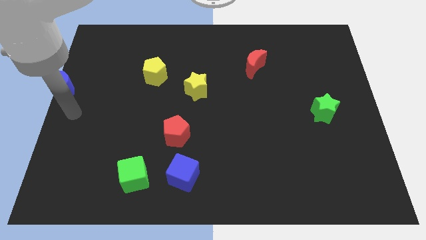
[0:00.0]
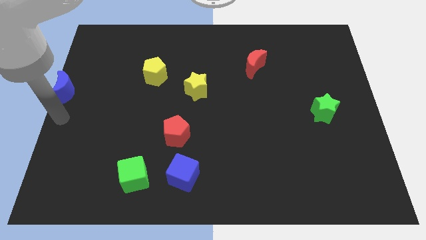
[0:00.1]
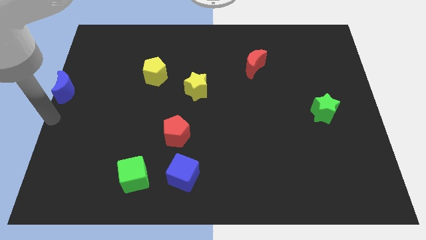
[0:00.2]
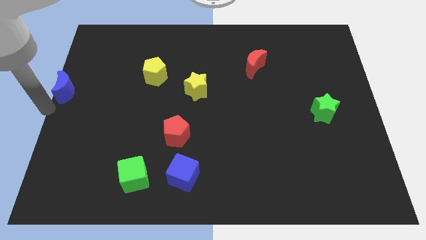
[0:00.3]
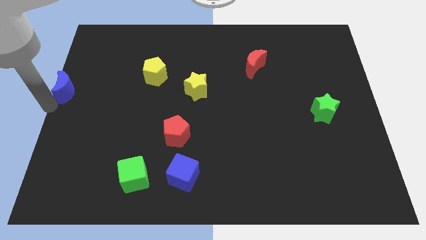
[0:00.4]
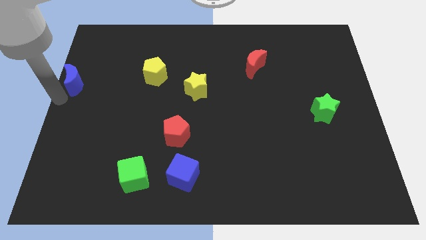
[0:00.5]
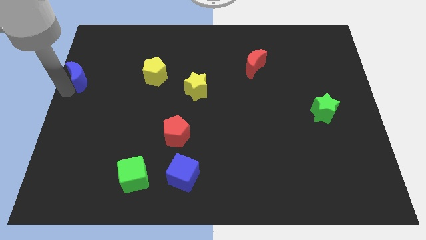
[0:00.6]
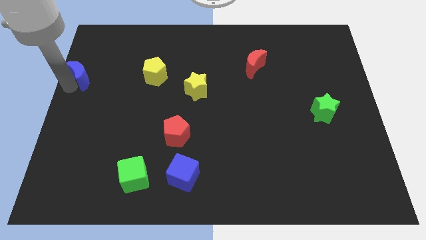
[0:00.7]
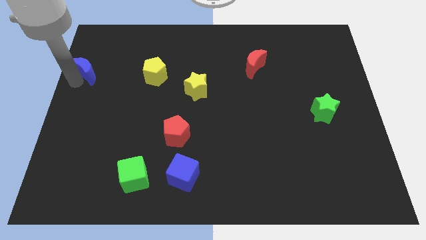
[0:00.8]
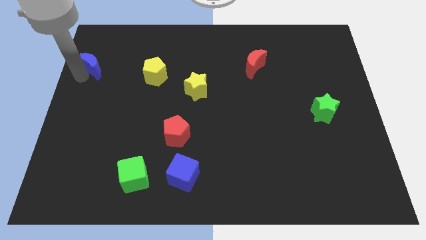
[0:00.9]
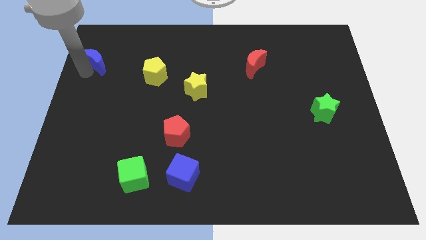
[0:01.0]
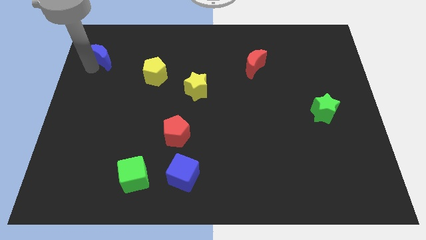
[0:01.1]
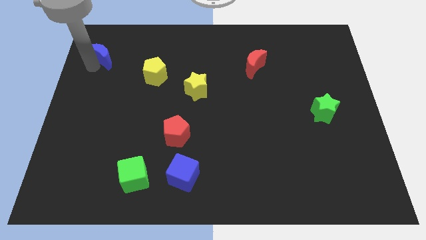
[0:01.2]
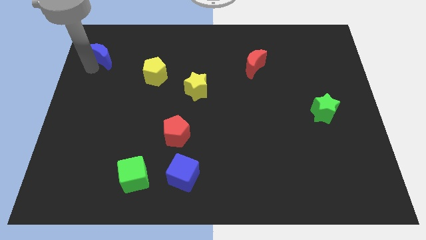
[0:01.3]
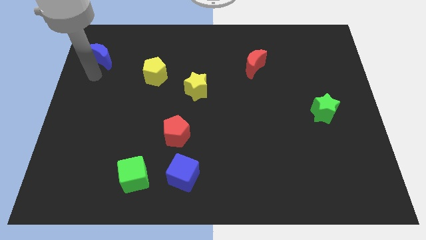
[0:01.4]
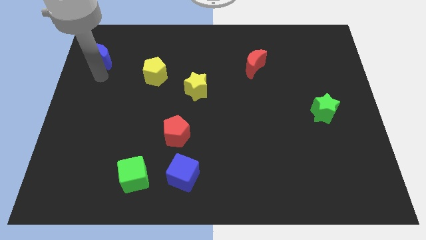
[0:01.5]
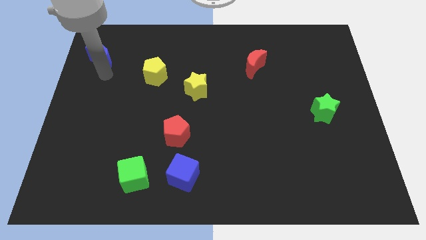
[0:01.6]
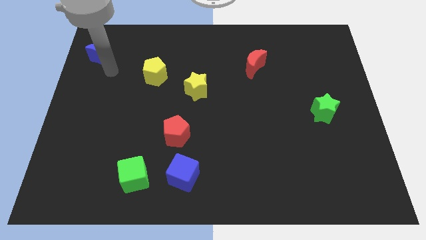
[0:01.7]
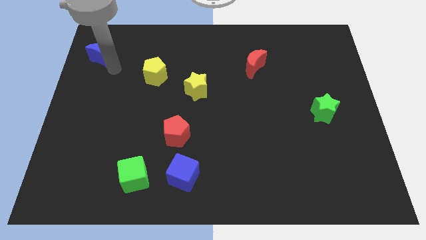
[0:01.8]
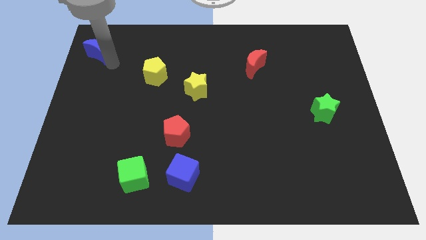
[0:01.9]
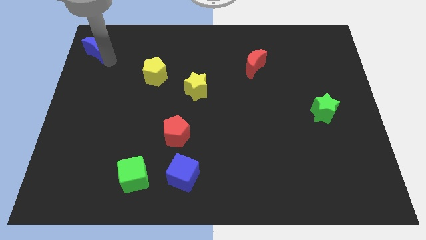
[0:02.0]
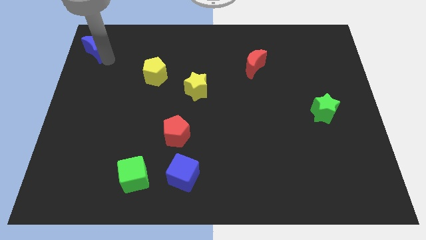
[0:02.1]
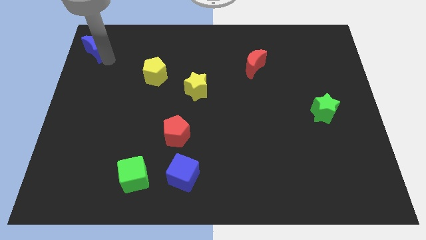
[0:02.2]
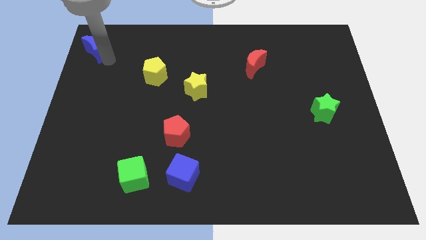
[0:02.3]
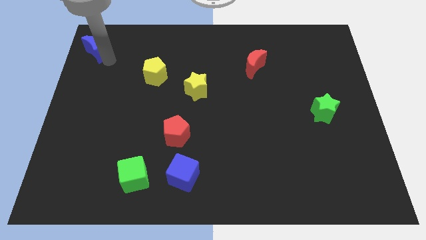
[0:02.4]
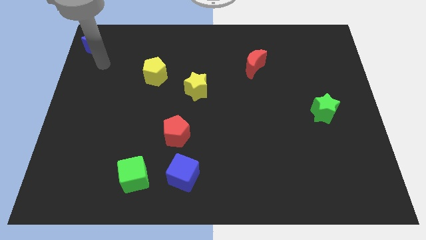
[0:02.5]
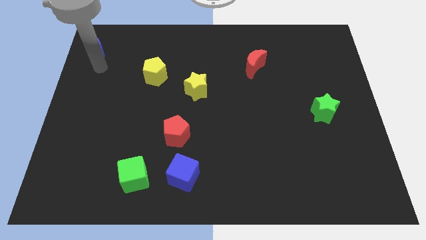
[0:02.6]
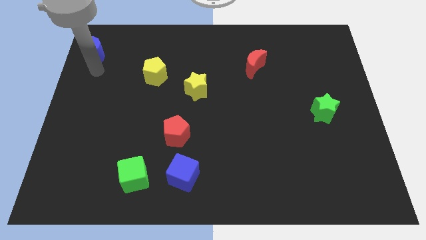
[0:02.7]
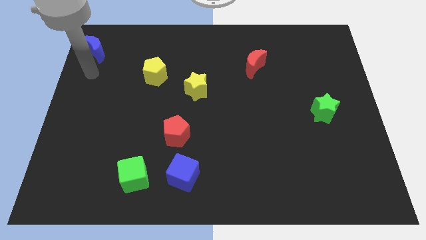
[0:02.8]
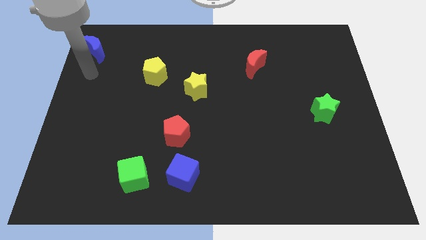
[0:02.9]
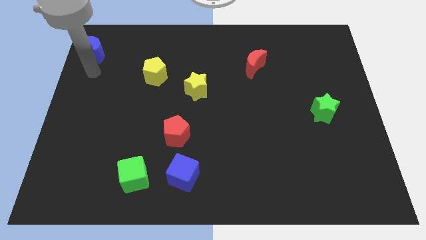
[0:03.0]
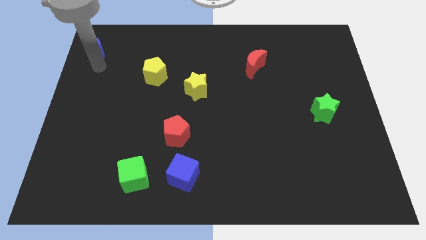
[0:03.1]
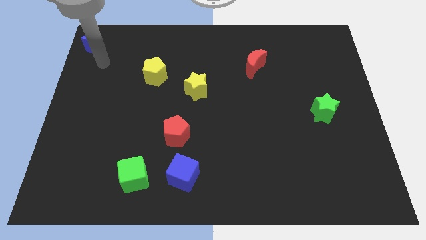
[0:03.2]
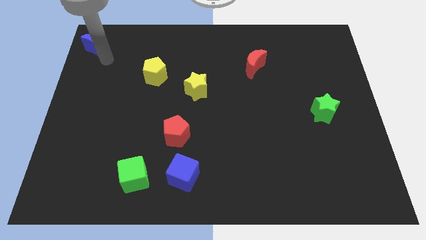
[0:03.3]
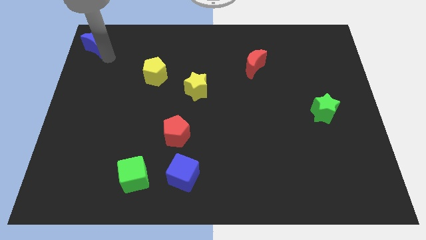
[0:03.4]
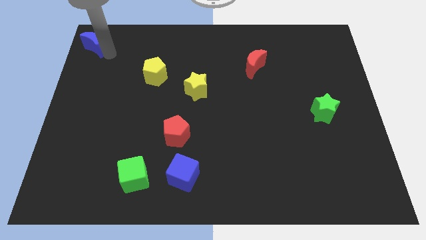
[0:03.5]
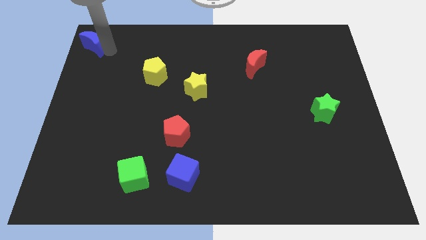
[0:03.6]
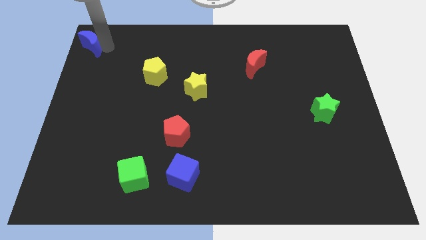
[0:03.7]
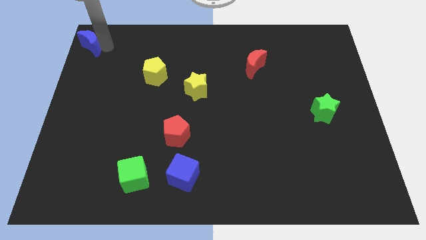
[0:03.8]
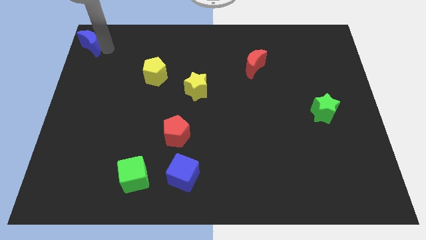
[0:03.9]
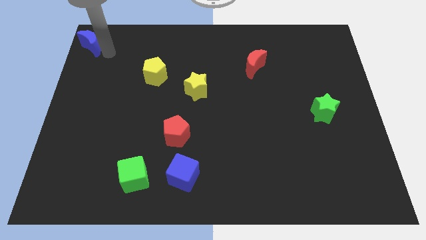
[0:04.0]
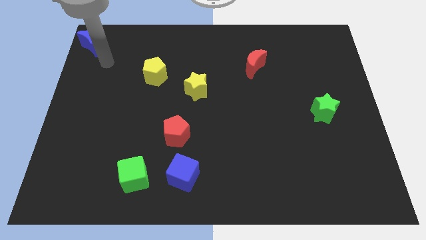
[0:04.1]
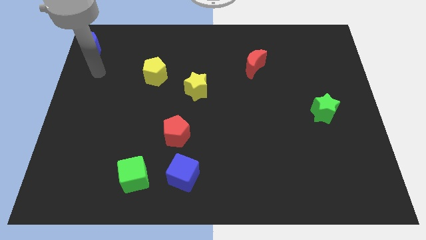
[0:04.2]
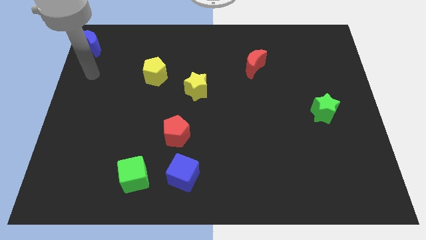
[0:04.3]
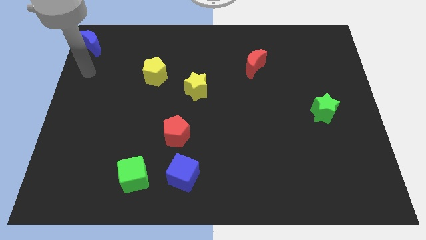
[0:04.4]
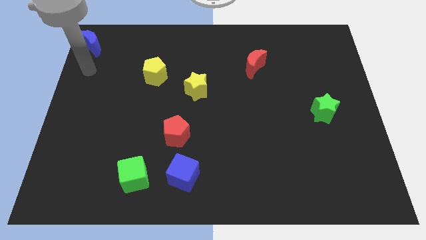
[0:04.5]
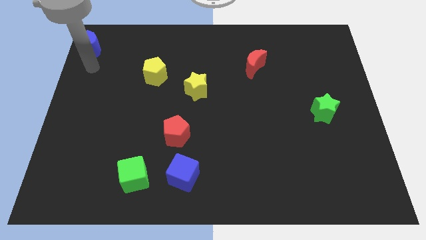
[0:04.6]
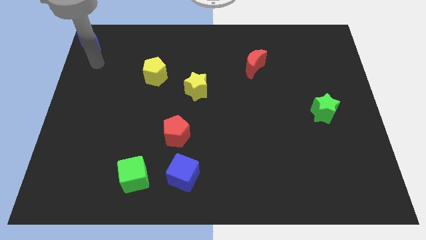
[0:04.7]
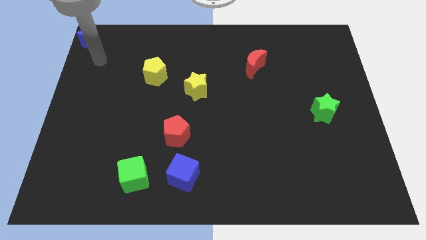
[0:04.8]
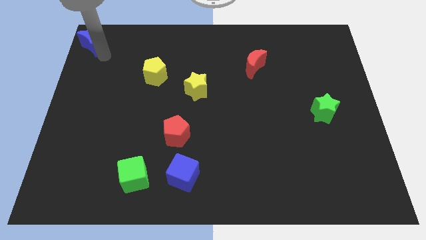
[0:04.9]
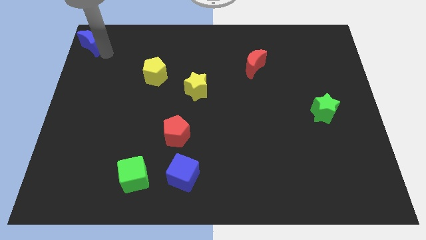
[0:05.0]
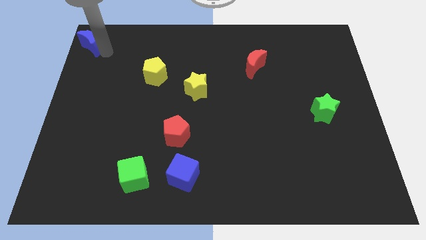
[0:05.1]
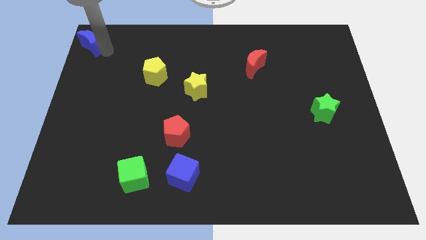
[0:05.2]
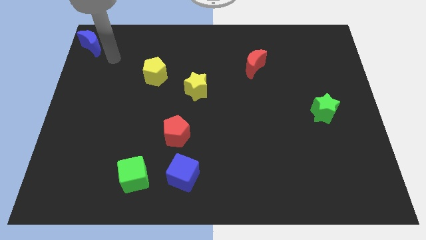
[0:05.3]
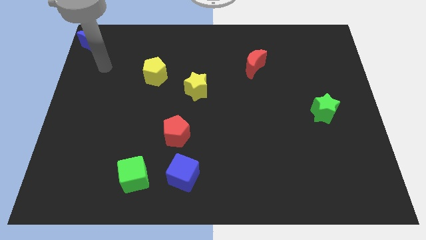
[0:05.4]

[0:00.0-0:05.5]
put the blue moon at the top left corner

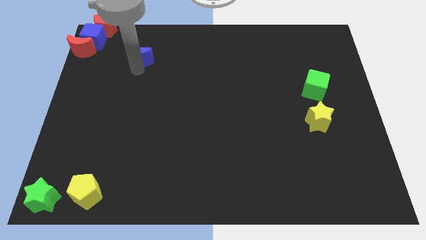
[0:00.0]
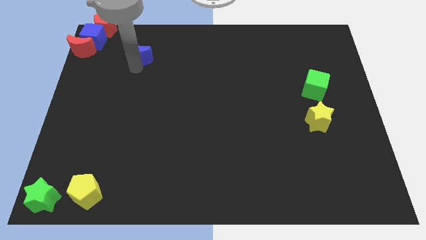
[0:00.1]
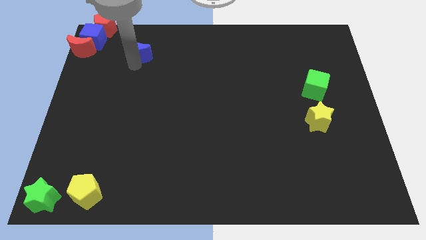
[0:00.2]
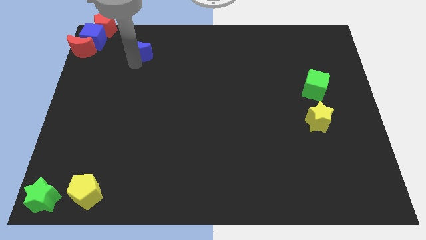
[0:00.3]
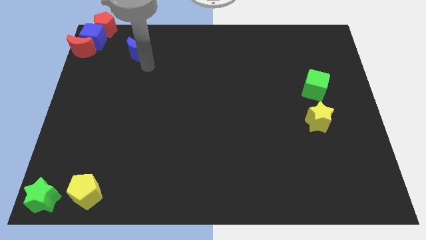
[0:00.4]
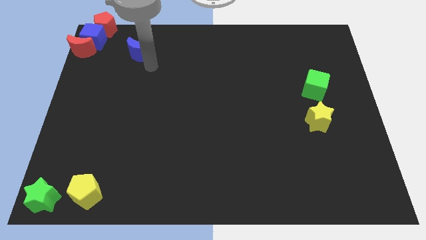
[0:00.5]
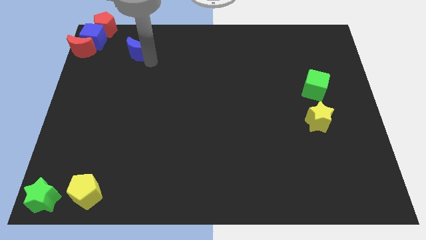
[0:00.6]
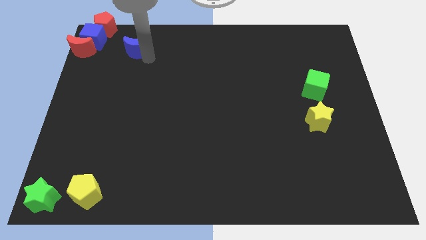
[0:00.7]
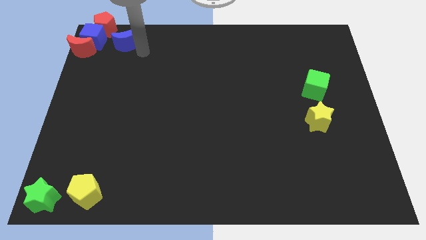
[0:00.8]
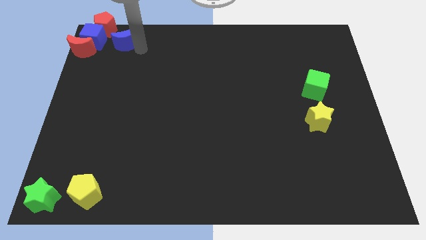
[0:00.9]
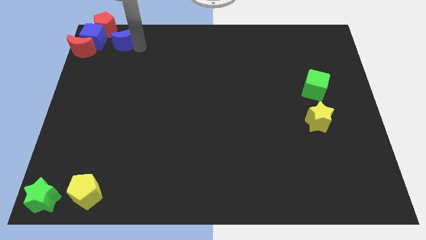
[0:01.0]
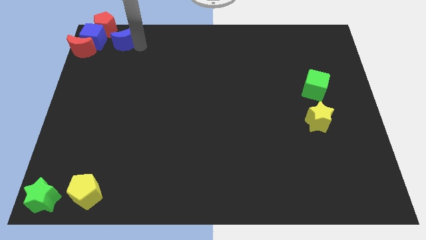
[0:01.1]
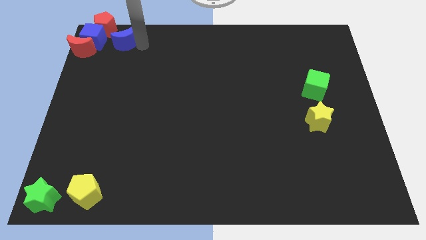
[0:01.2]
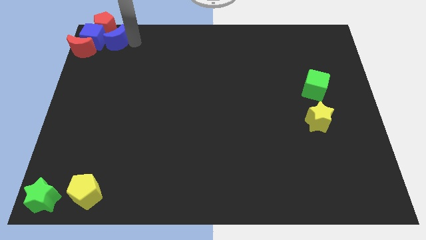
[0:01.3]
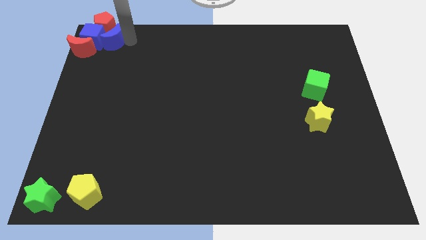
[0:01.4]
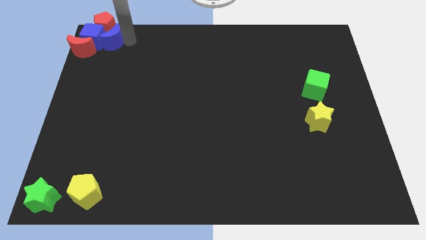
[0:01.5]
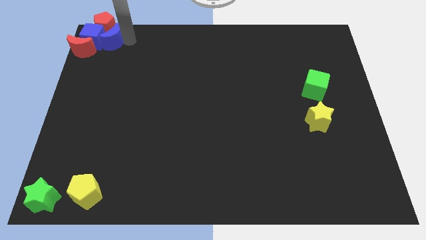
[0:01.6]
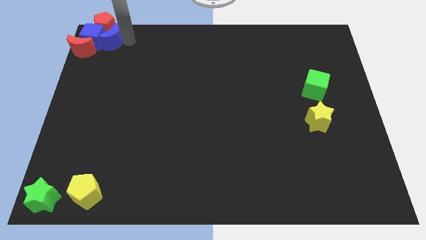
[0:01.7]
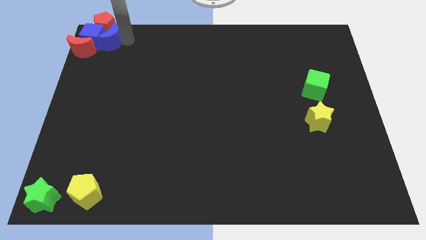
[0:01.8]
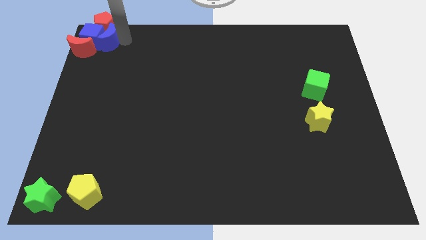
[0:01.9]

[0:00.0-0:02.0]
push the blue moon to the top left corner of the board

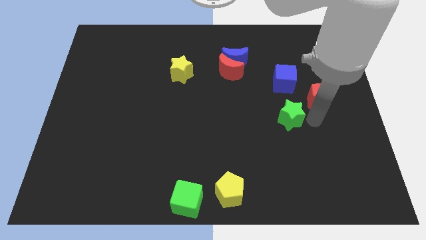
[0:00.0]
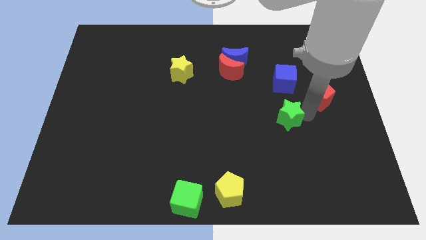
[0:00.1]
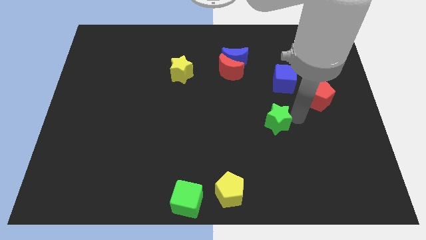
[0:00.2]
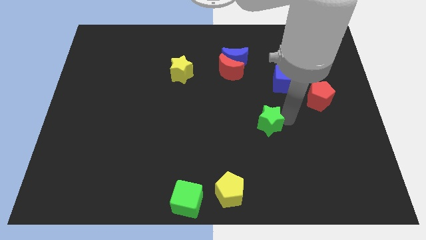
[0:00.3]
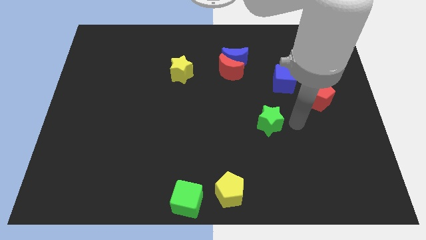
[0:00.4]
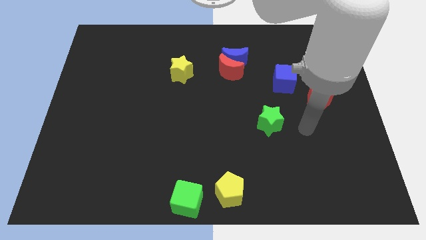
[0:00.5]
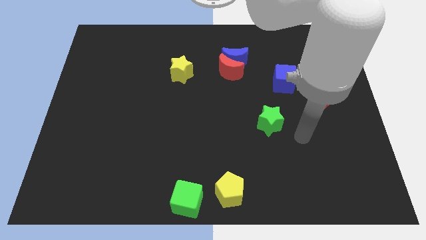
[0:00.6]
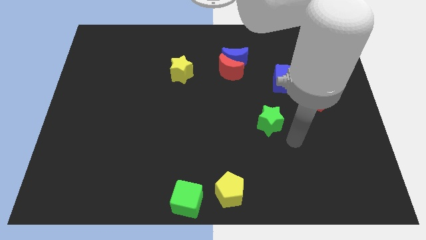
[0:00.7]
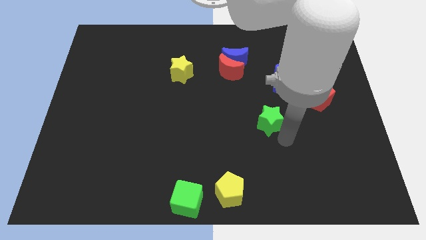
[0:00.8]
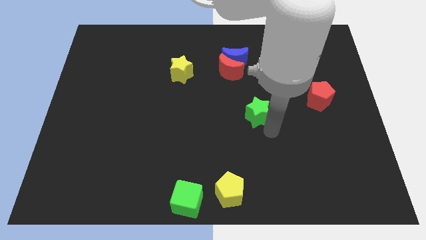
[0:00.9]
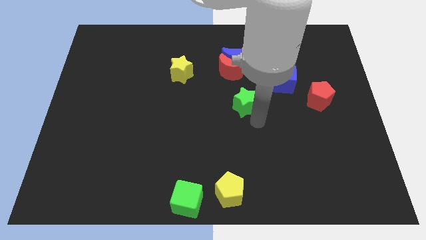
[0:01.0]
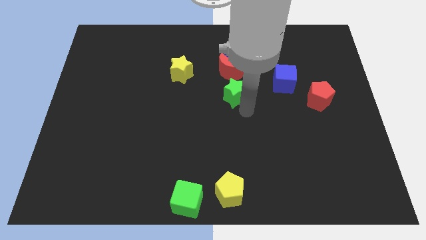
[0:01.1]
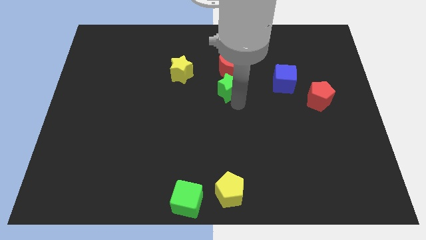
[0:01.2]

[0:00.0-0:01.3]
push the green star to the bottom of the red crescent

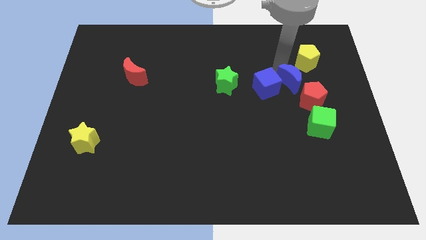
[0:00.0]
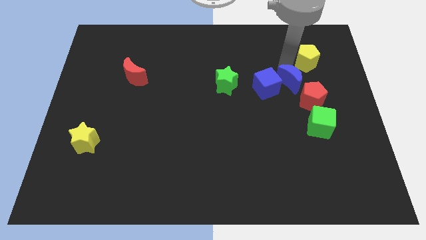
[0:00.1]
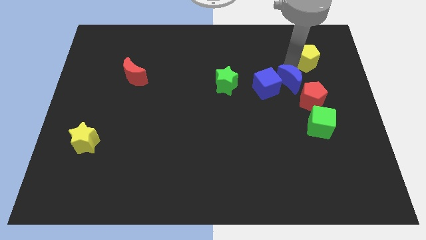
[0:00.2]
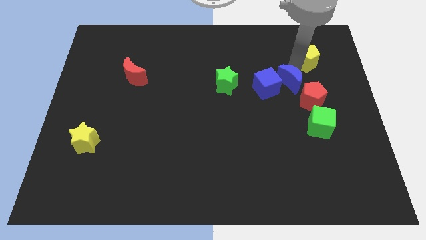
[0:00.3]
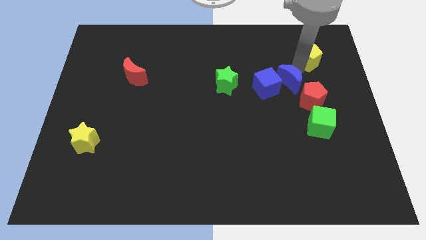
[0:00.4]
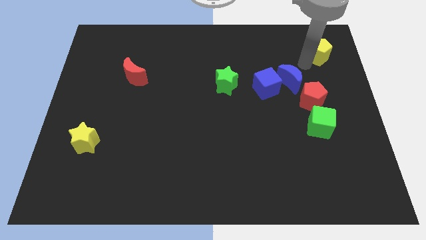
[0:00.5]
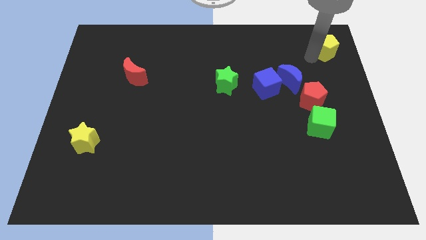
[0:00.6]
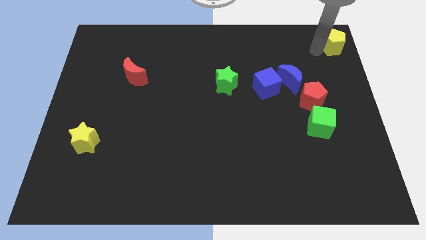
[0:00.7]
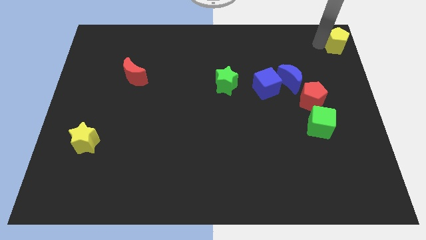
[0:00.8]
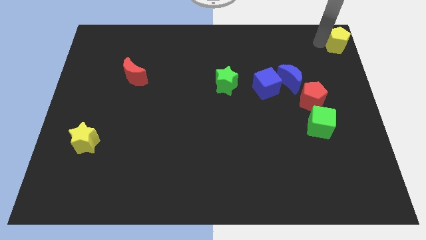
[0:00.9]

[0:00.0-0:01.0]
move yellow pentagon to the top right corner of the board
